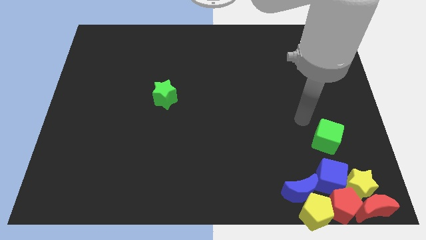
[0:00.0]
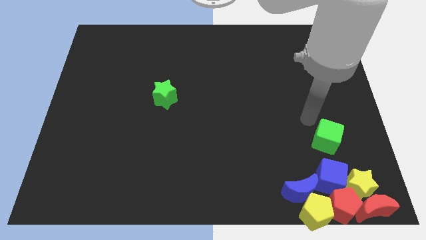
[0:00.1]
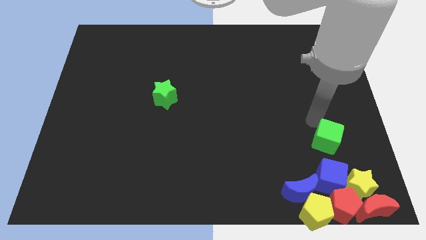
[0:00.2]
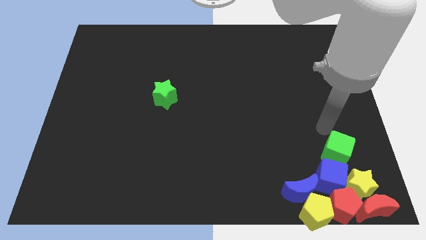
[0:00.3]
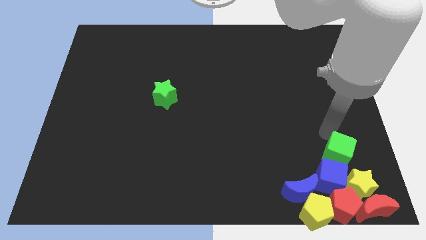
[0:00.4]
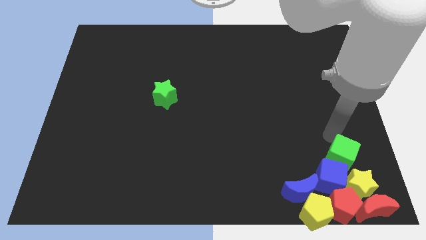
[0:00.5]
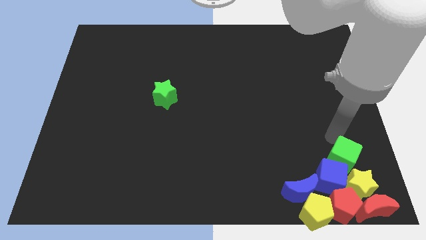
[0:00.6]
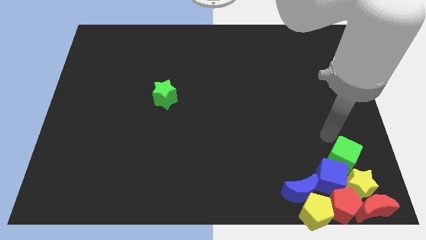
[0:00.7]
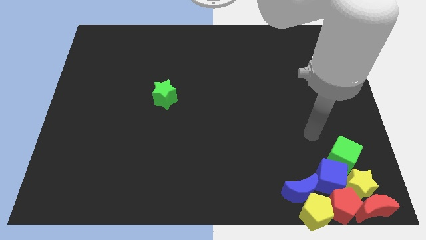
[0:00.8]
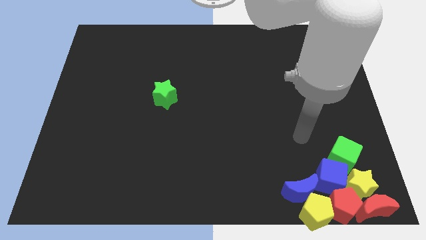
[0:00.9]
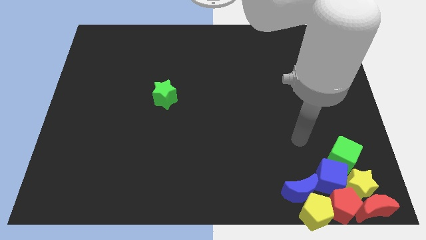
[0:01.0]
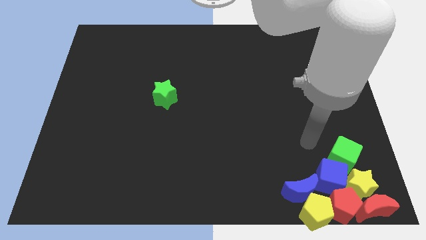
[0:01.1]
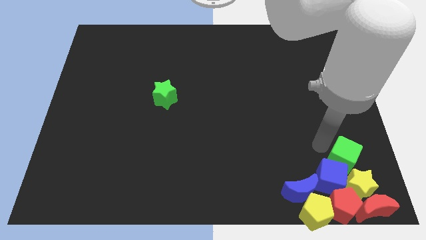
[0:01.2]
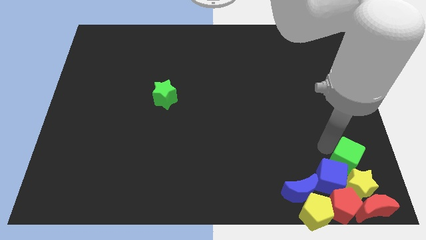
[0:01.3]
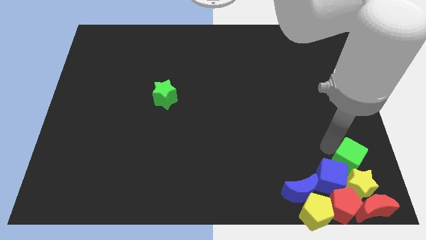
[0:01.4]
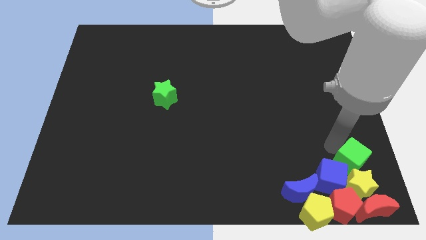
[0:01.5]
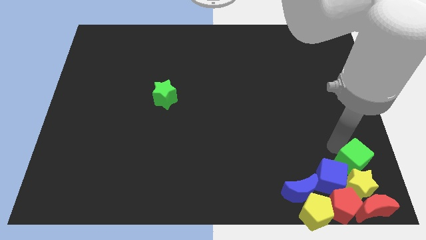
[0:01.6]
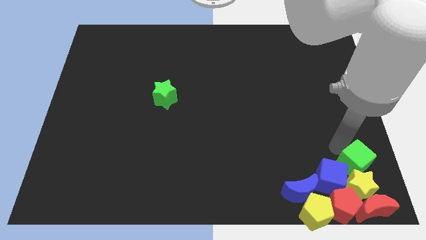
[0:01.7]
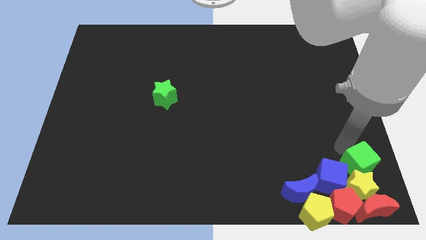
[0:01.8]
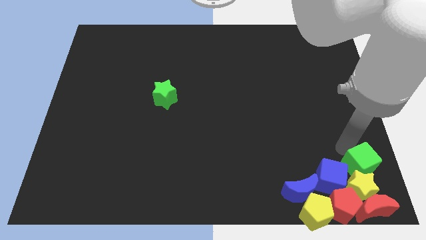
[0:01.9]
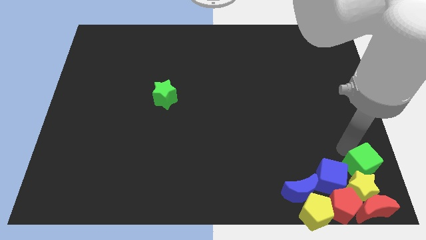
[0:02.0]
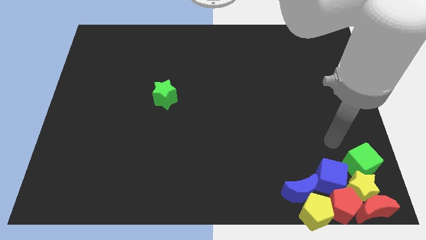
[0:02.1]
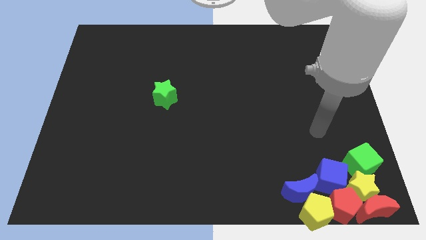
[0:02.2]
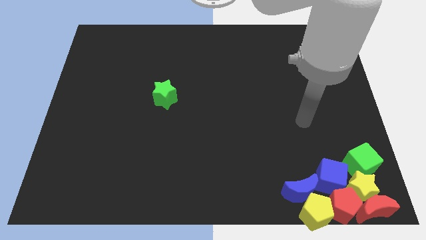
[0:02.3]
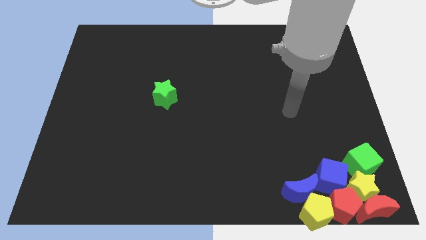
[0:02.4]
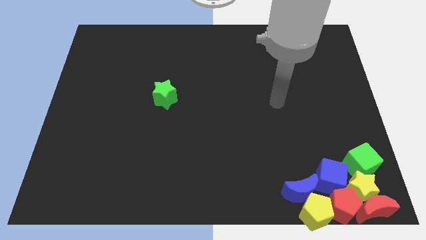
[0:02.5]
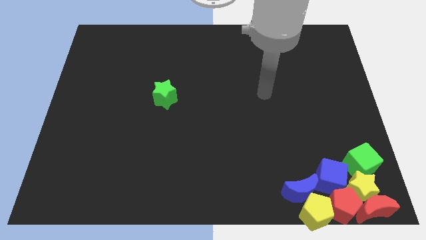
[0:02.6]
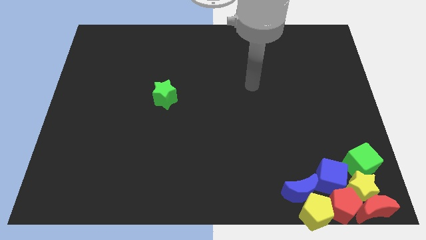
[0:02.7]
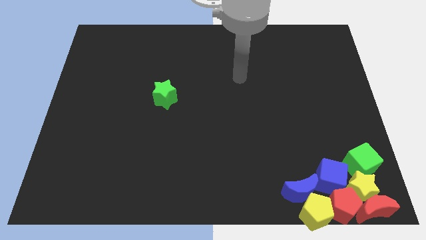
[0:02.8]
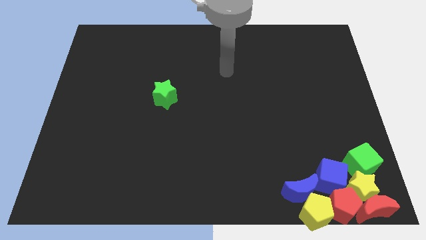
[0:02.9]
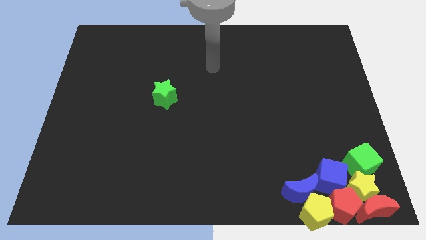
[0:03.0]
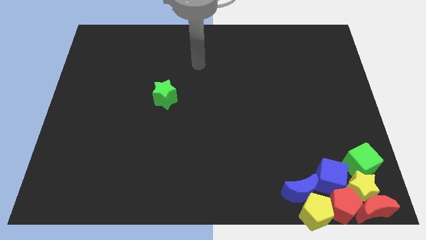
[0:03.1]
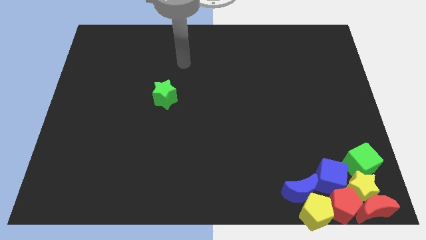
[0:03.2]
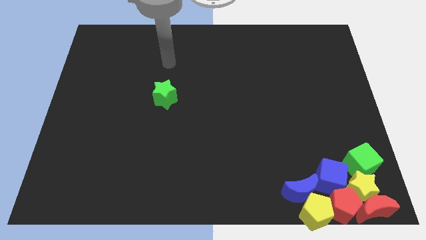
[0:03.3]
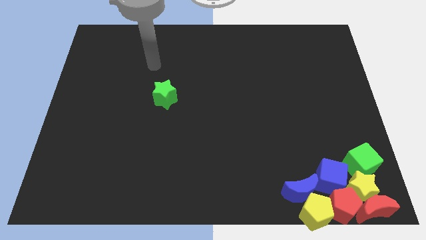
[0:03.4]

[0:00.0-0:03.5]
put the green cube vertially above the yellow star

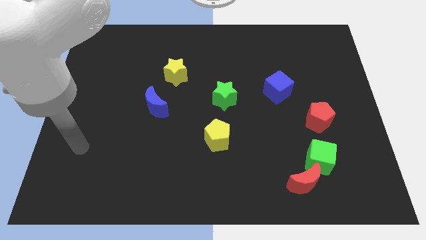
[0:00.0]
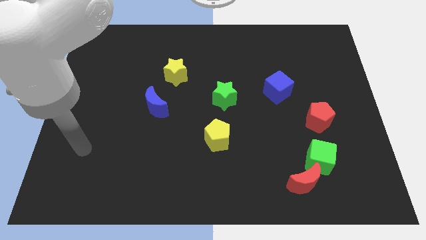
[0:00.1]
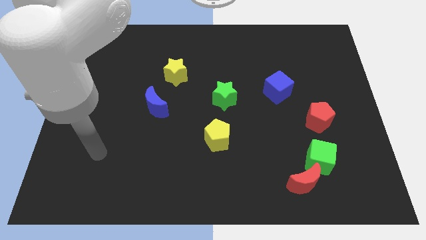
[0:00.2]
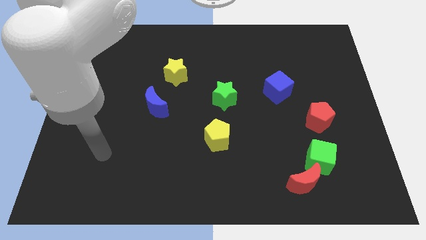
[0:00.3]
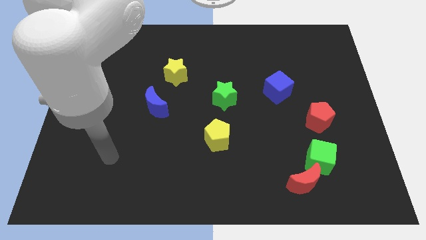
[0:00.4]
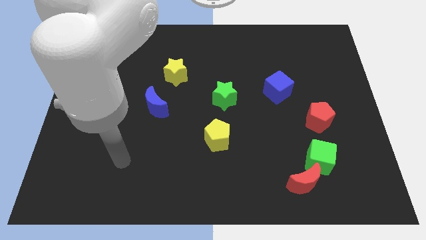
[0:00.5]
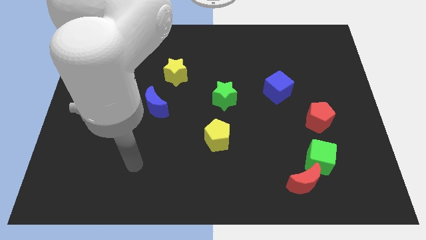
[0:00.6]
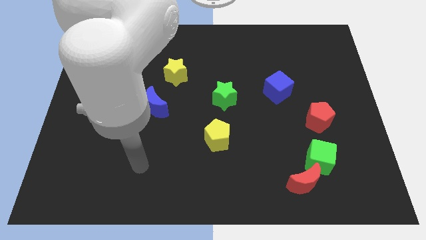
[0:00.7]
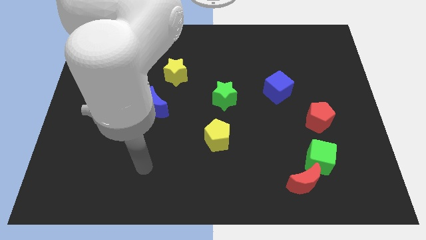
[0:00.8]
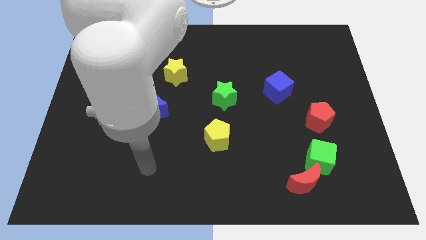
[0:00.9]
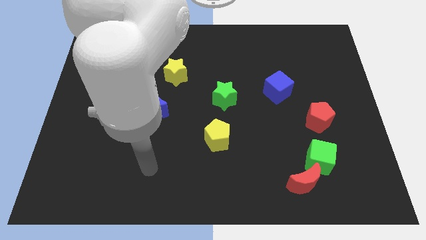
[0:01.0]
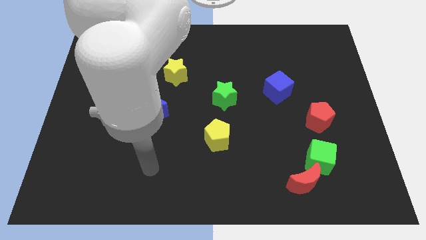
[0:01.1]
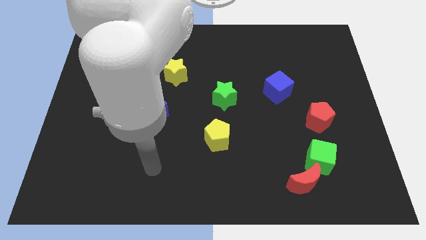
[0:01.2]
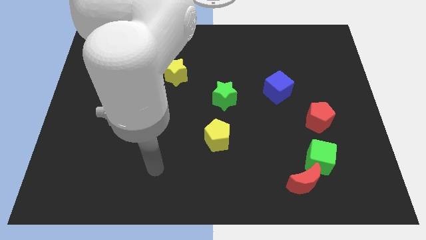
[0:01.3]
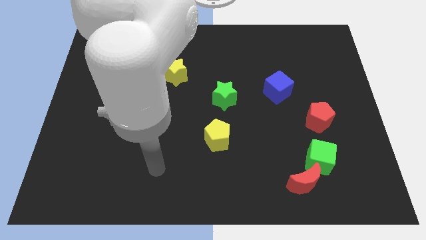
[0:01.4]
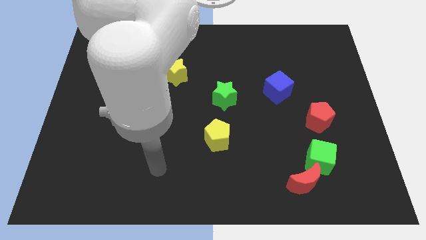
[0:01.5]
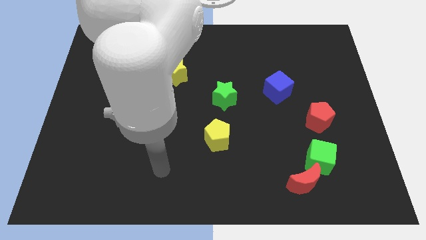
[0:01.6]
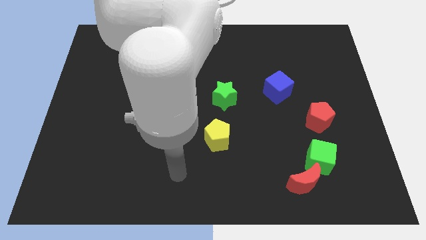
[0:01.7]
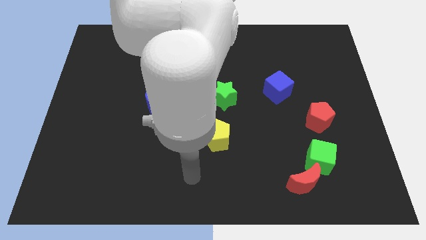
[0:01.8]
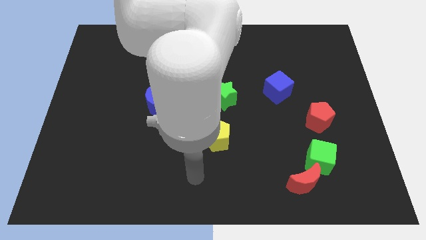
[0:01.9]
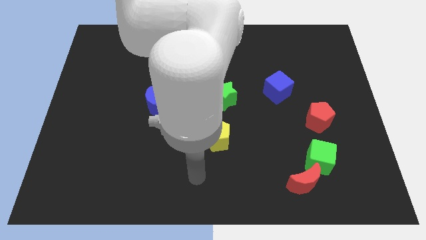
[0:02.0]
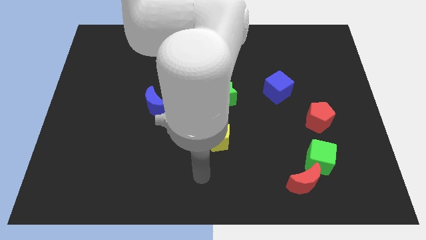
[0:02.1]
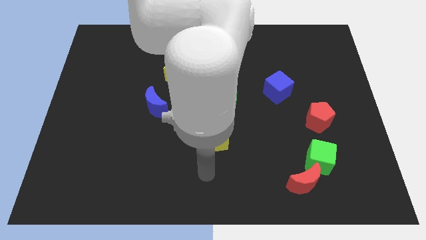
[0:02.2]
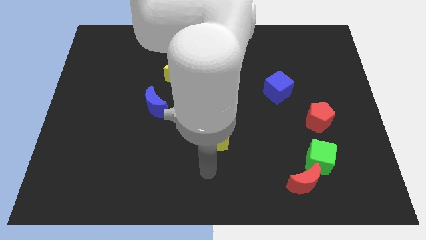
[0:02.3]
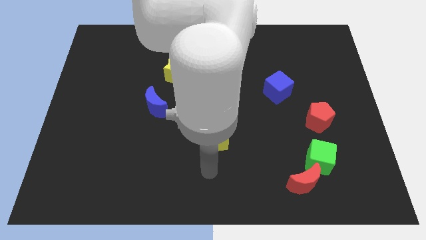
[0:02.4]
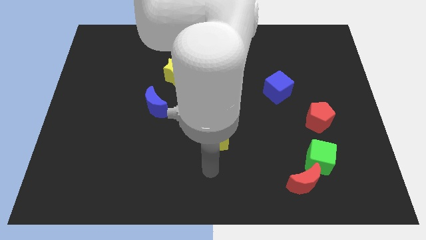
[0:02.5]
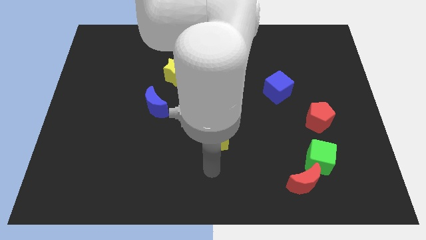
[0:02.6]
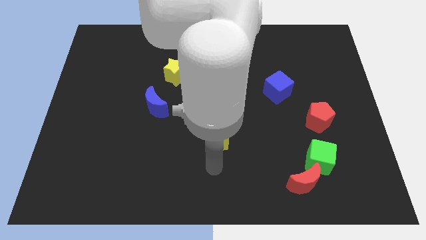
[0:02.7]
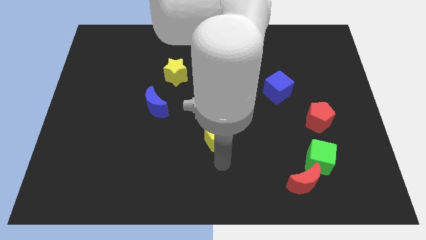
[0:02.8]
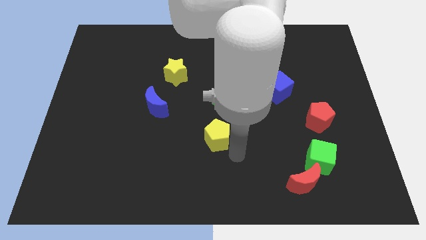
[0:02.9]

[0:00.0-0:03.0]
move your arm to the bottom of yellow pentagon

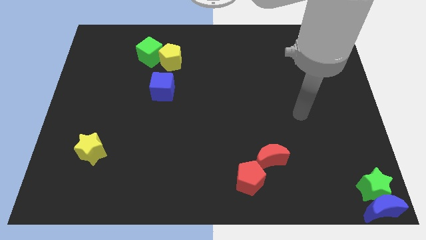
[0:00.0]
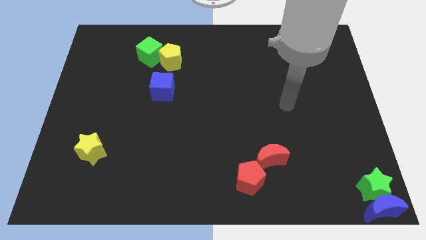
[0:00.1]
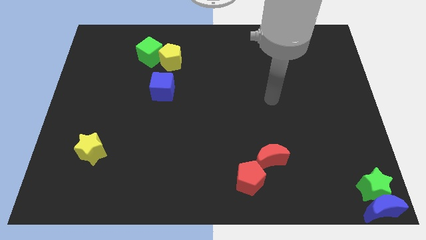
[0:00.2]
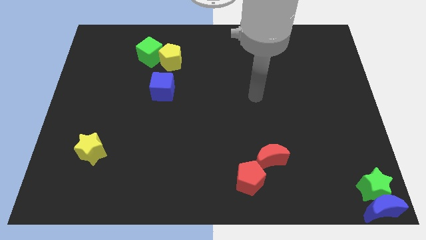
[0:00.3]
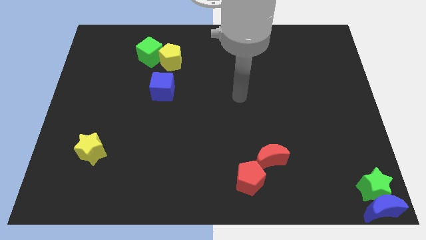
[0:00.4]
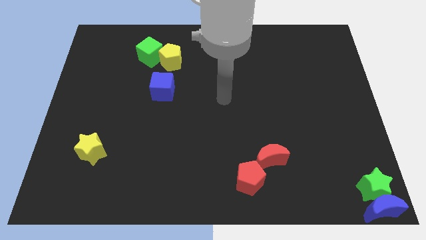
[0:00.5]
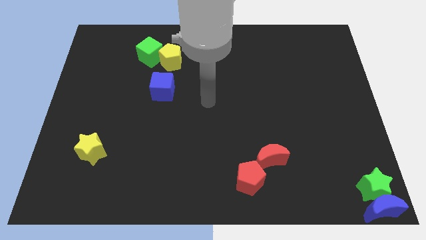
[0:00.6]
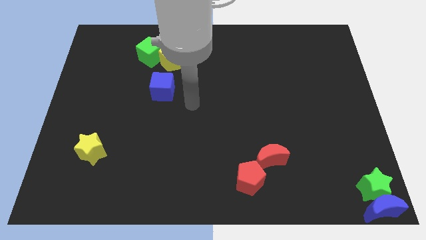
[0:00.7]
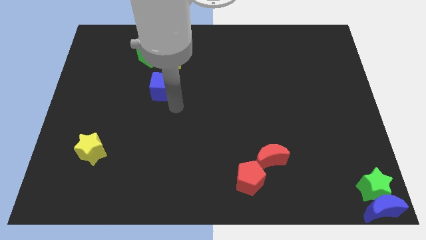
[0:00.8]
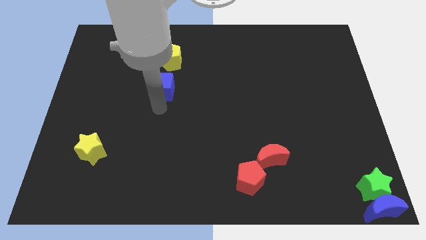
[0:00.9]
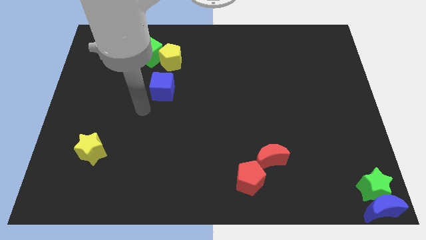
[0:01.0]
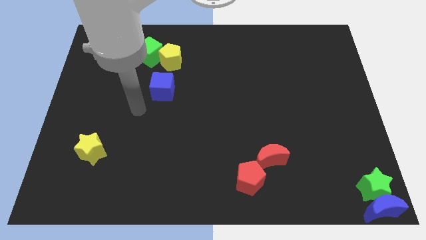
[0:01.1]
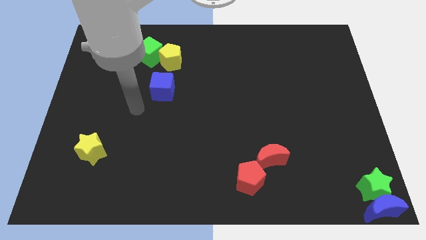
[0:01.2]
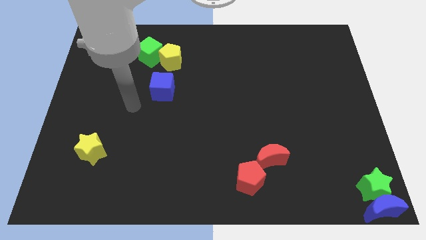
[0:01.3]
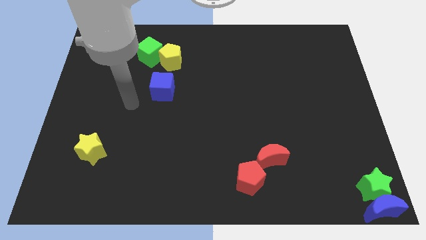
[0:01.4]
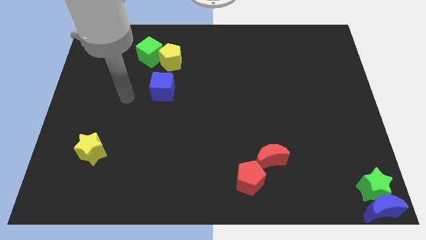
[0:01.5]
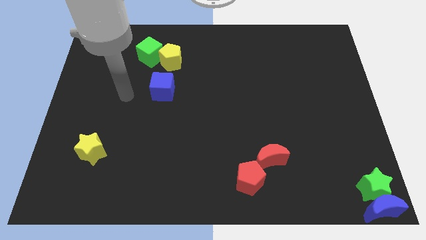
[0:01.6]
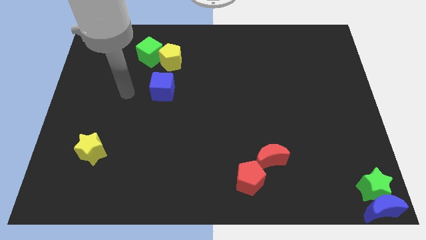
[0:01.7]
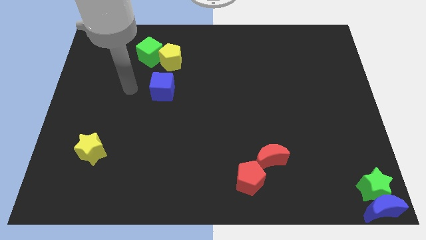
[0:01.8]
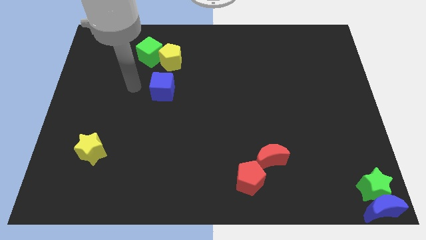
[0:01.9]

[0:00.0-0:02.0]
place your hand at the left side of the blue cube

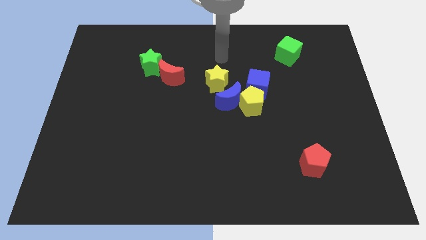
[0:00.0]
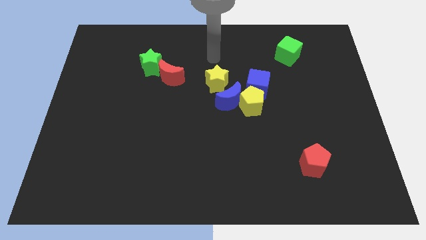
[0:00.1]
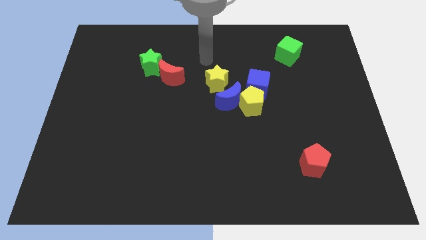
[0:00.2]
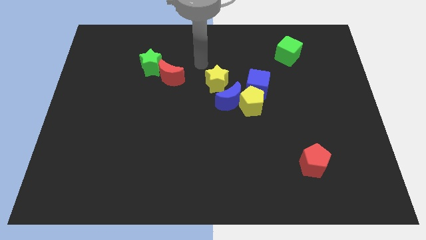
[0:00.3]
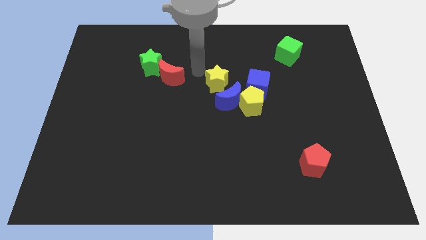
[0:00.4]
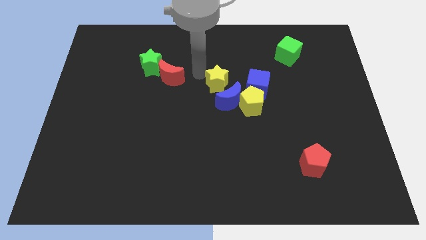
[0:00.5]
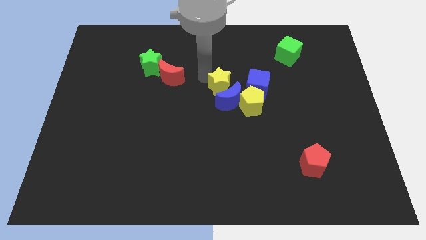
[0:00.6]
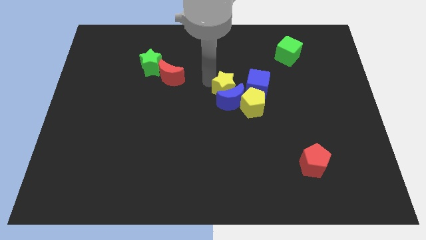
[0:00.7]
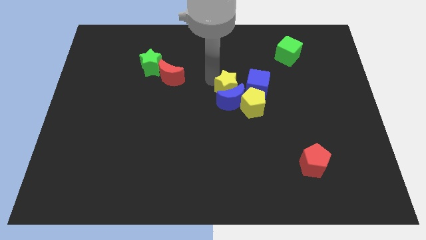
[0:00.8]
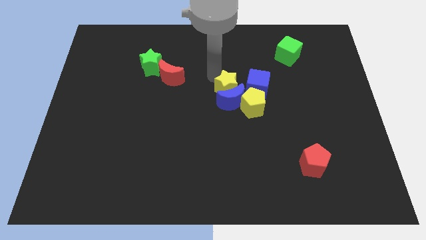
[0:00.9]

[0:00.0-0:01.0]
push the yellow star into the blue moon
